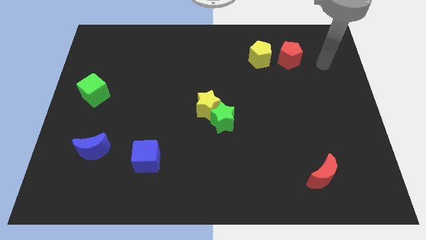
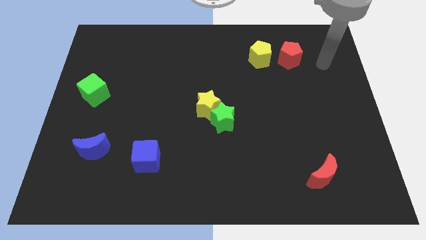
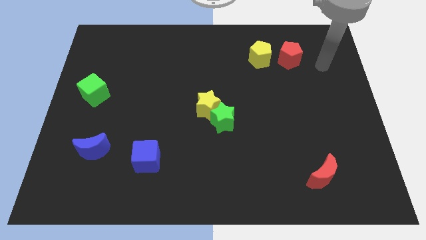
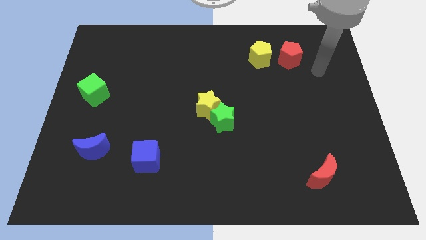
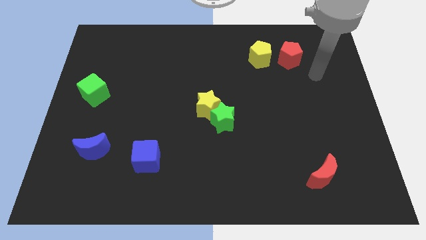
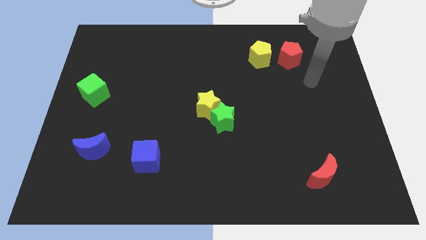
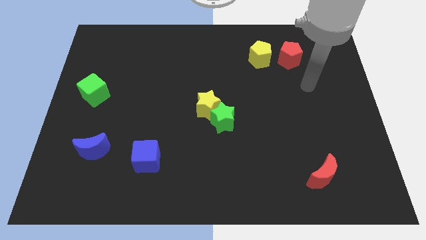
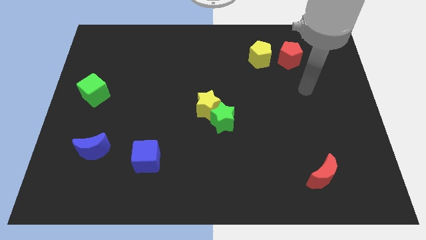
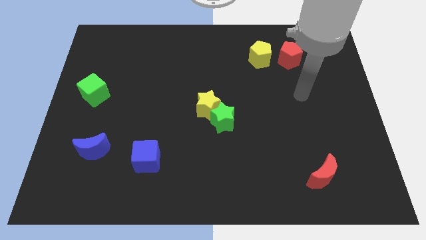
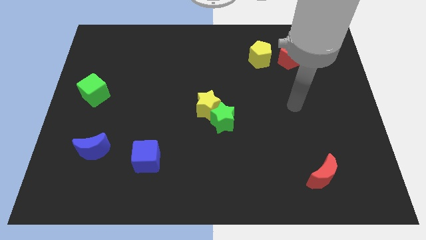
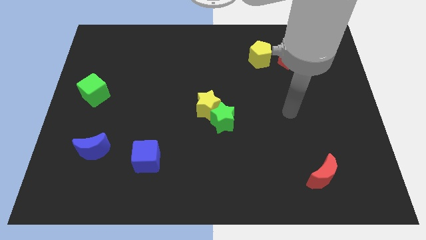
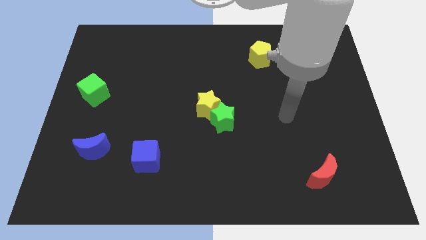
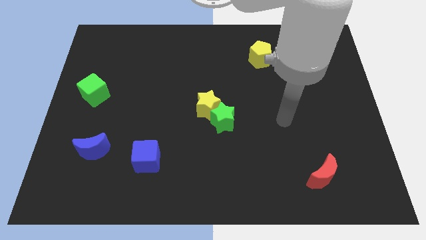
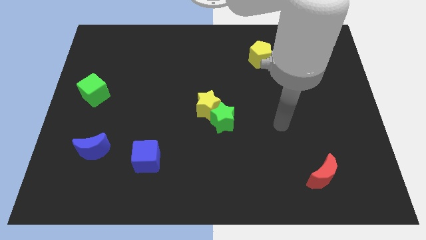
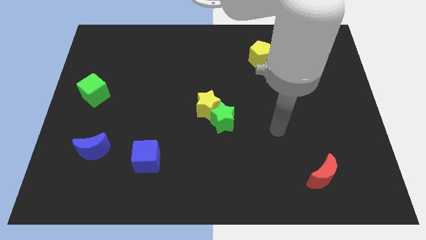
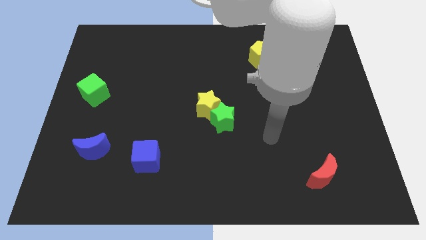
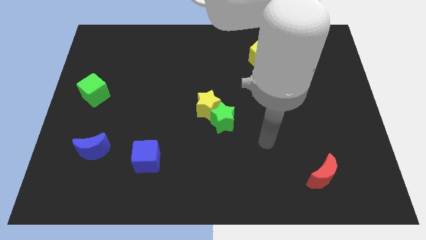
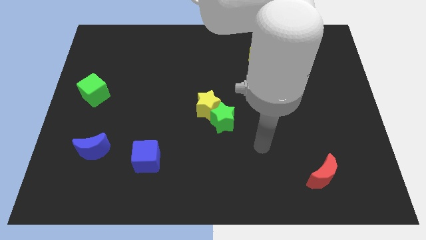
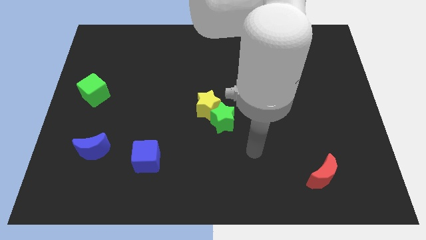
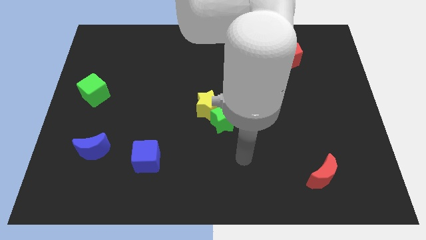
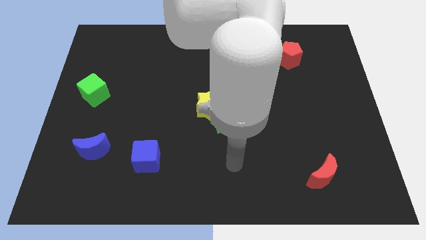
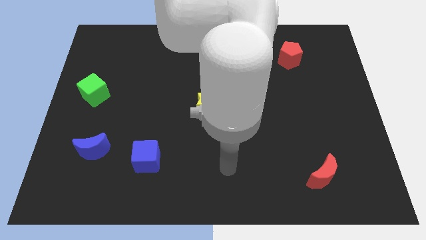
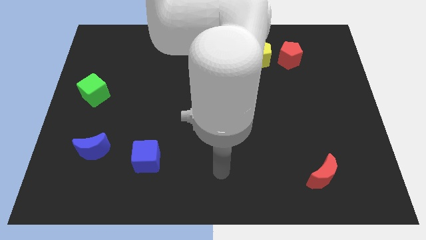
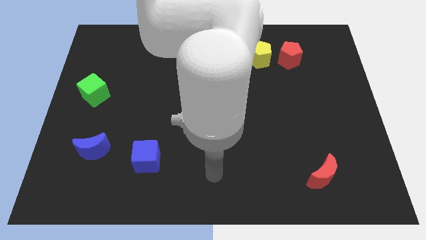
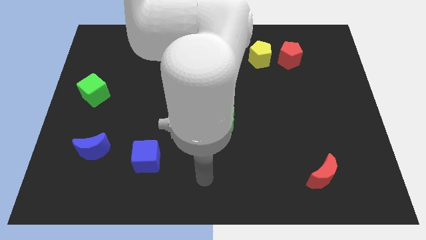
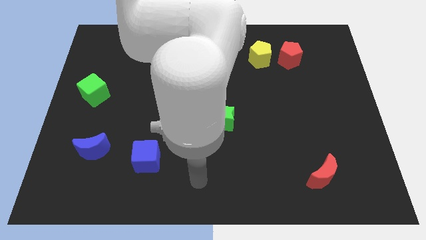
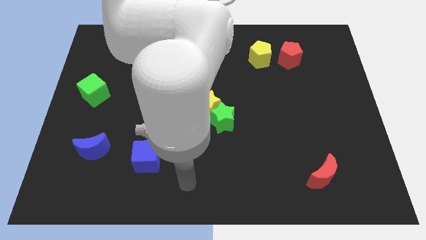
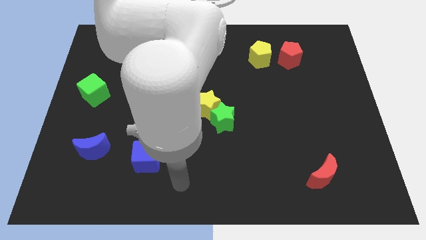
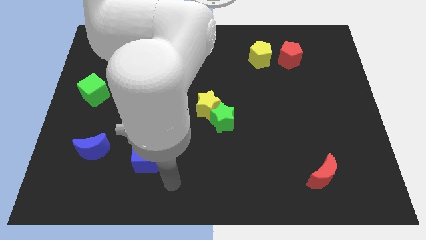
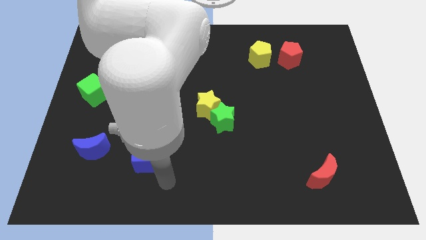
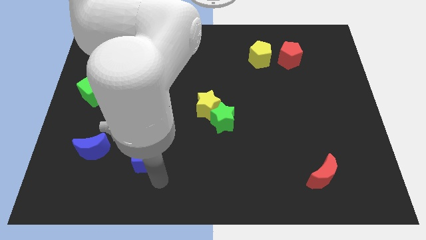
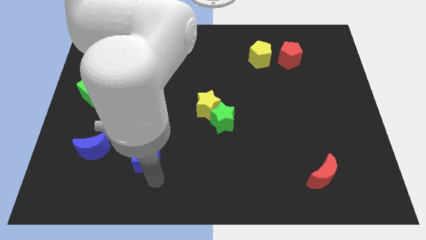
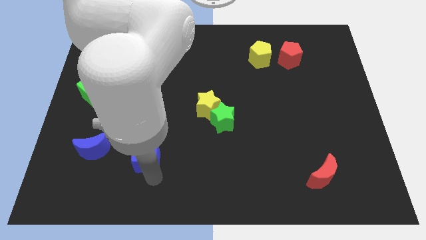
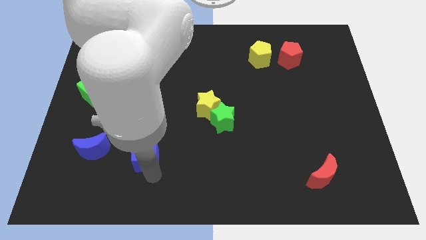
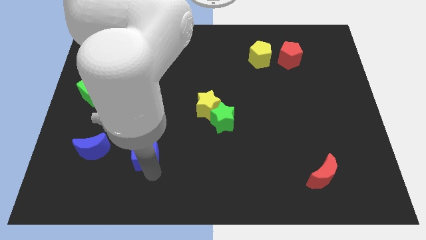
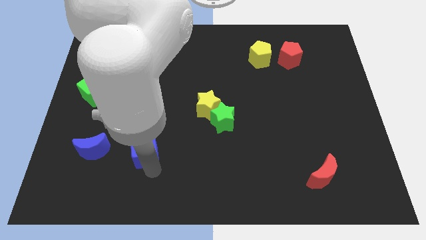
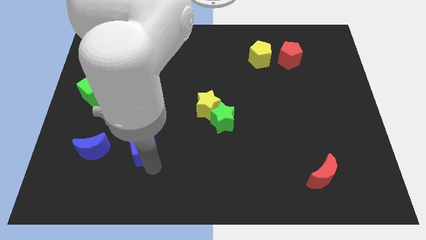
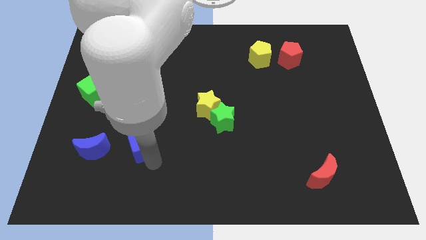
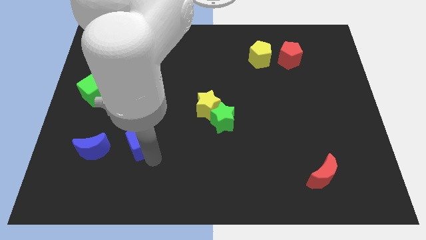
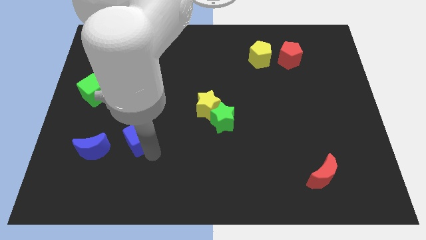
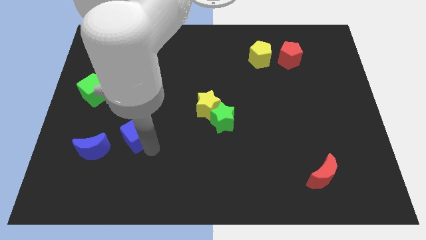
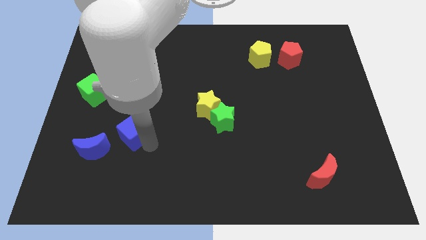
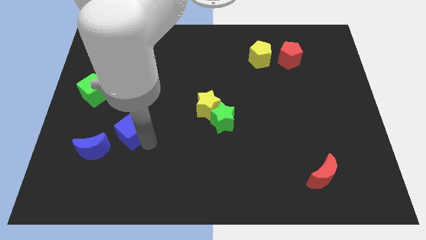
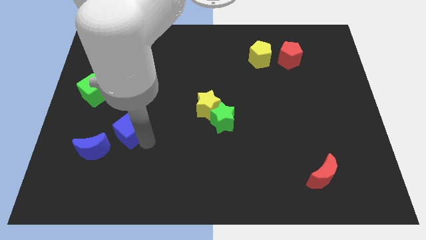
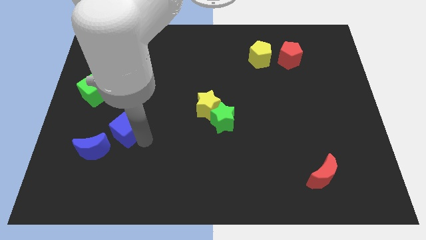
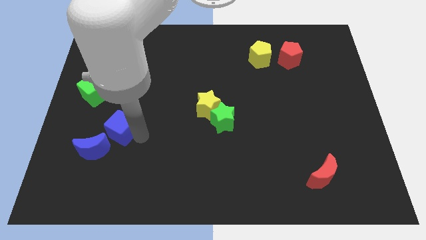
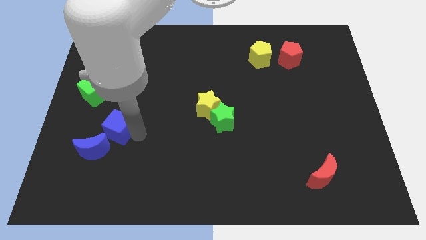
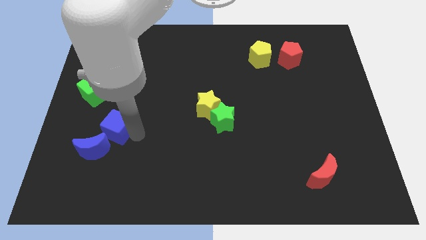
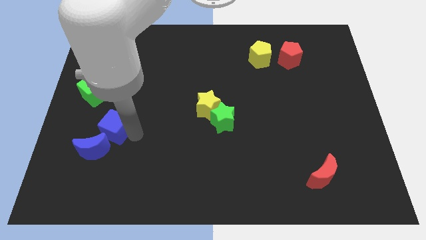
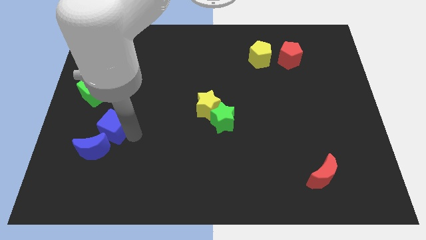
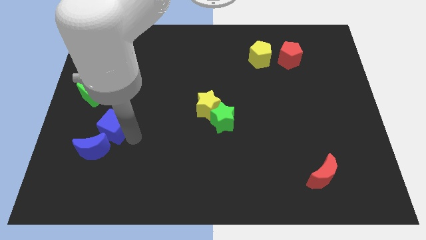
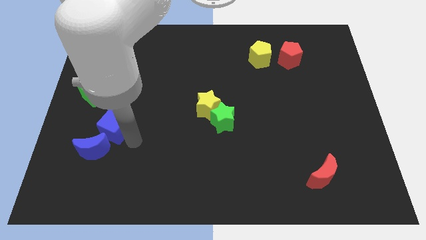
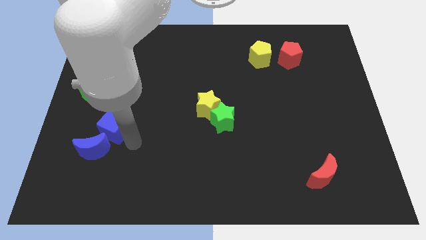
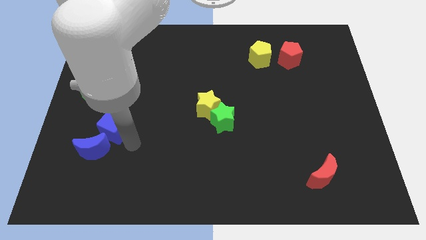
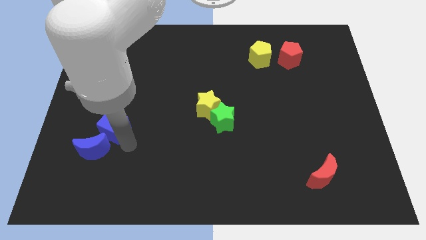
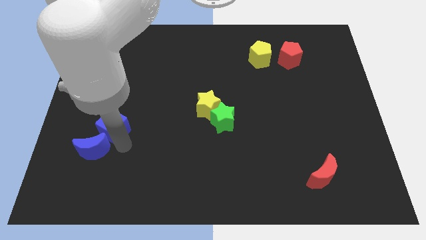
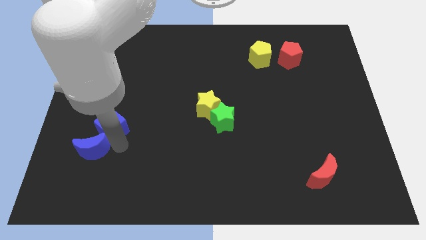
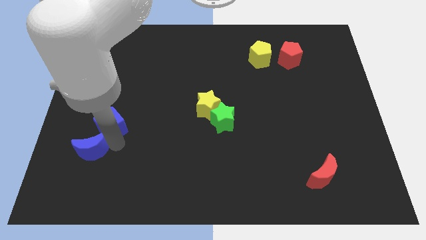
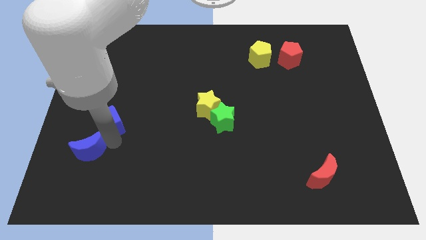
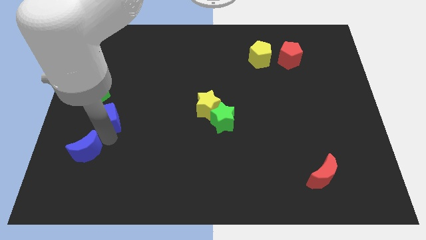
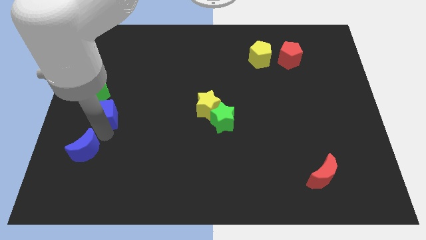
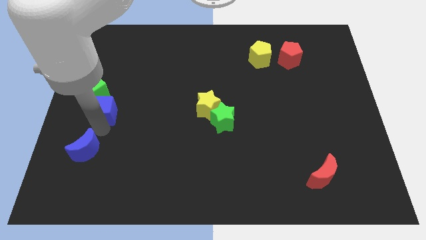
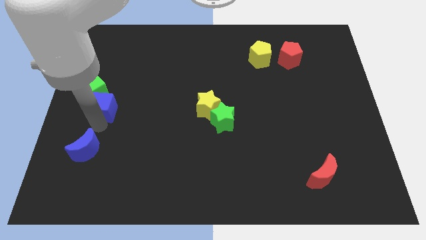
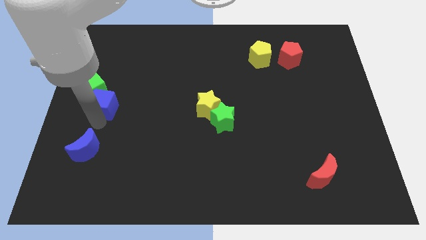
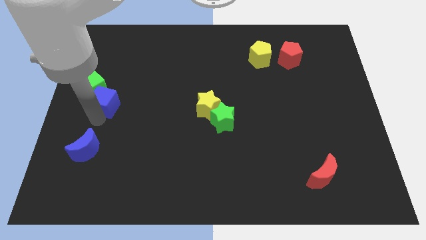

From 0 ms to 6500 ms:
put the blue cube to the green cube

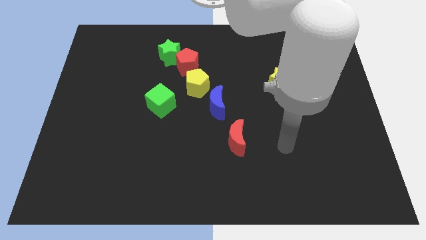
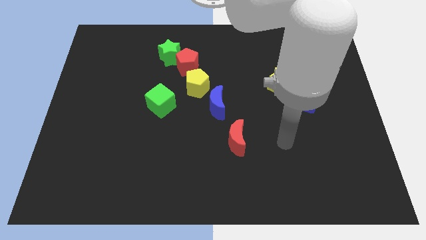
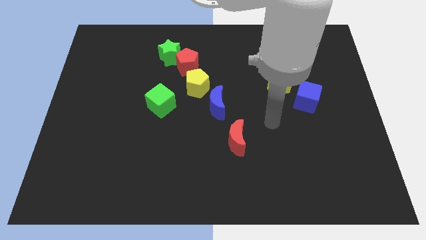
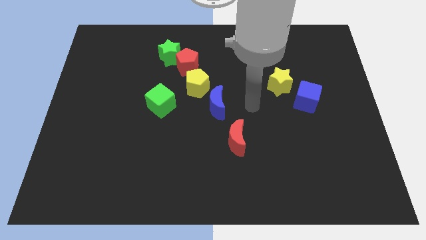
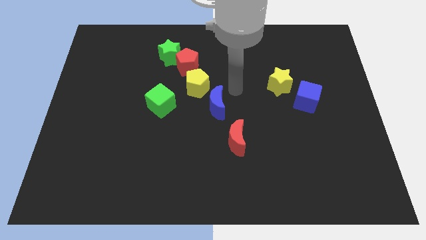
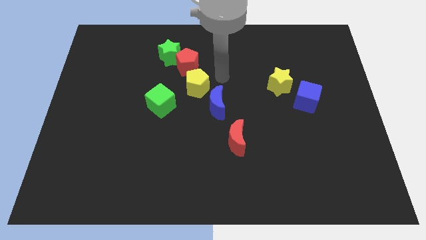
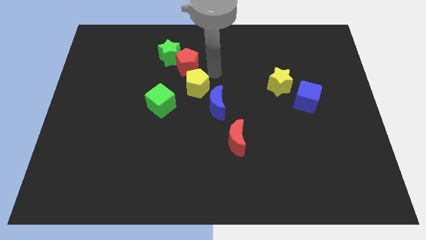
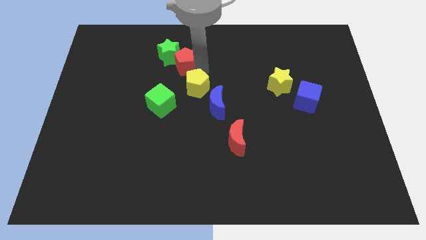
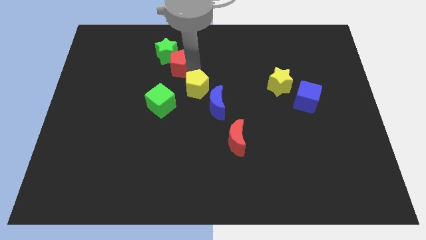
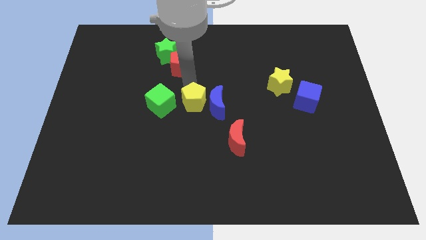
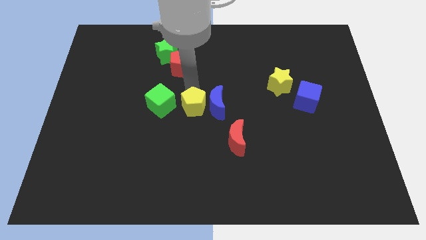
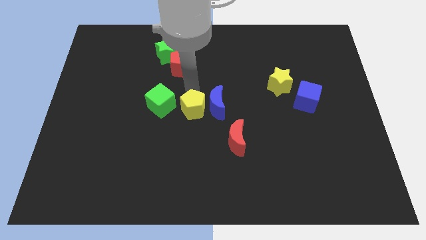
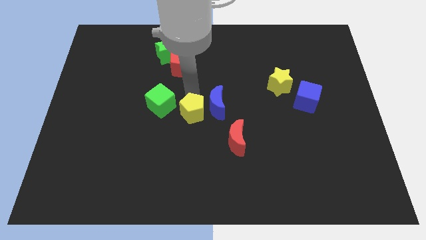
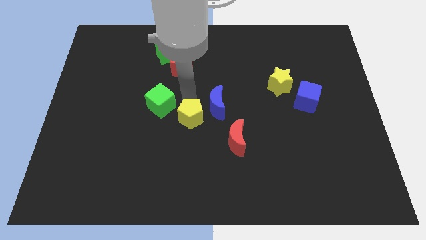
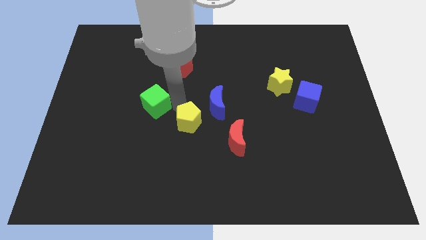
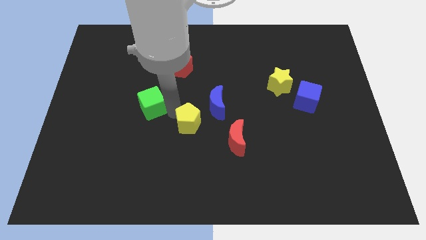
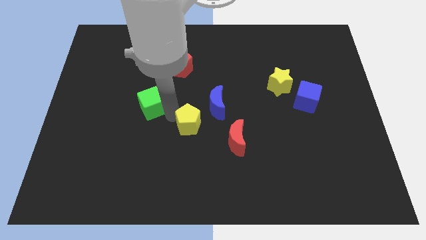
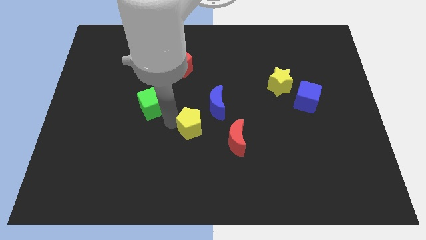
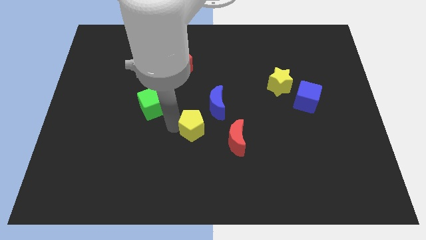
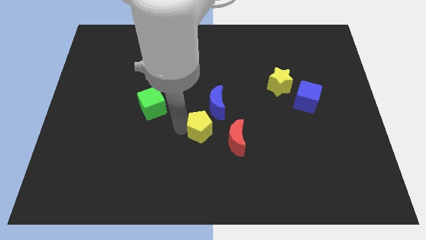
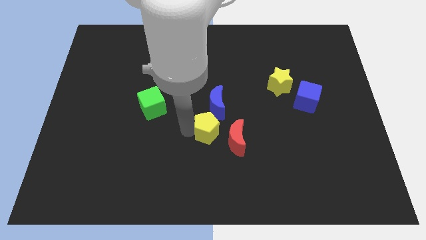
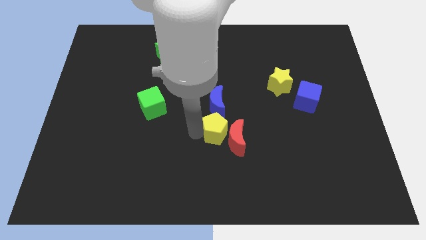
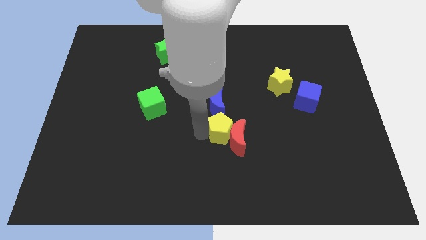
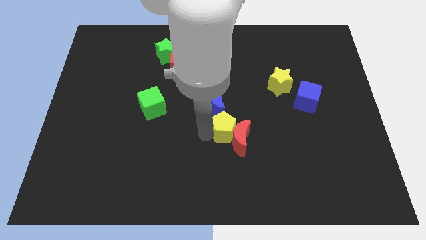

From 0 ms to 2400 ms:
push the yellow pentagon close to the red moon
